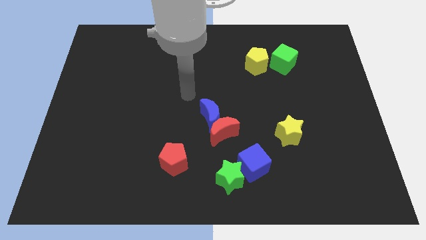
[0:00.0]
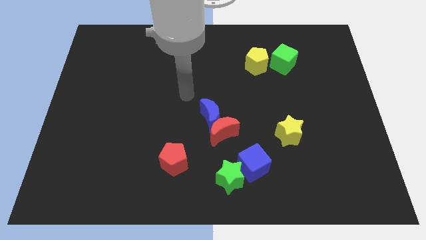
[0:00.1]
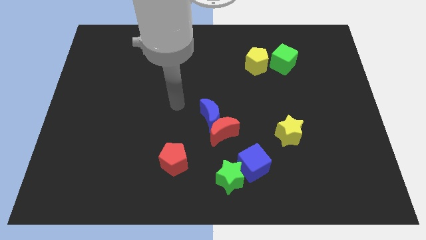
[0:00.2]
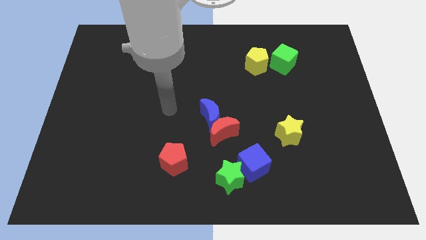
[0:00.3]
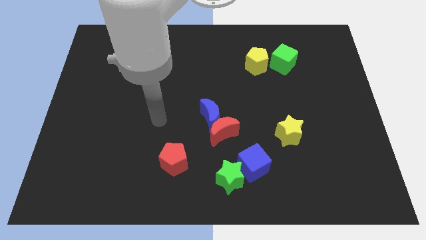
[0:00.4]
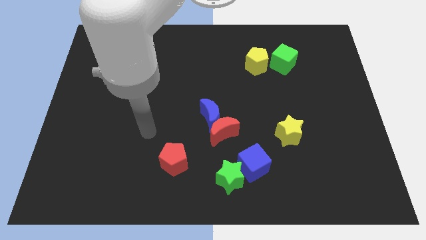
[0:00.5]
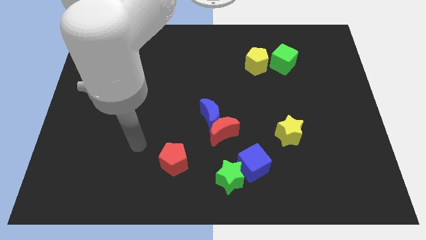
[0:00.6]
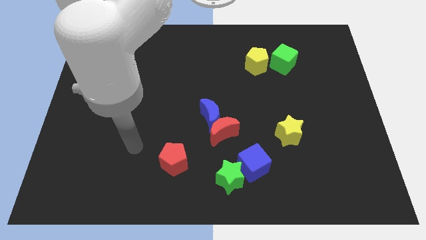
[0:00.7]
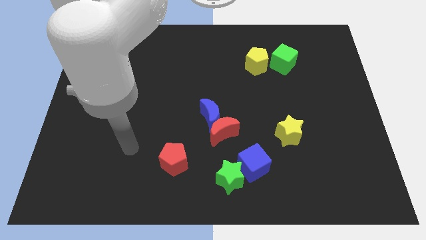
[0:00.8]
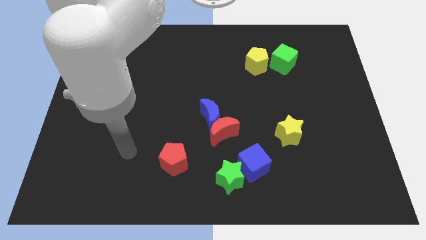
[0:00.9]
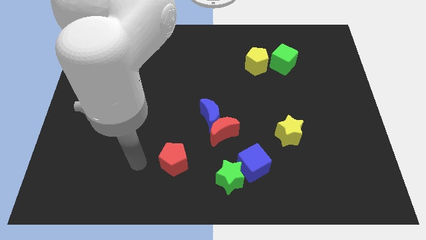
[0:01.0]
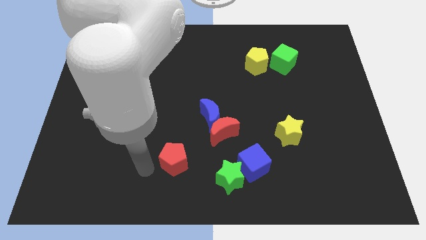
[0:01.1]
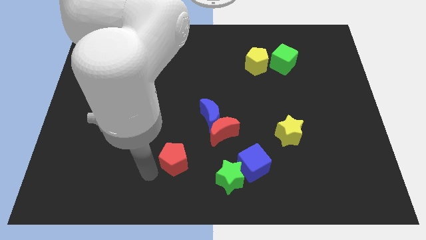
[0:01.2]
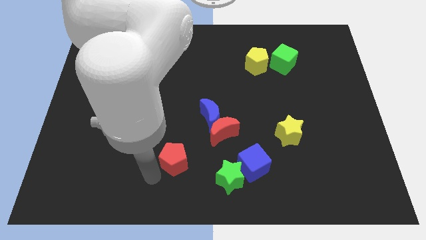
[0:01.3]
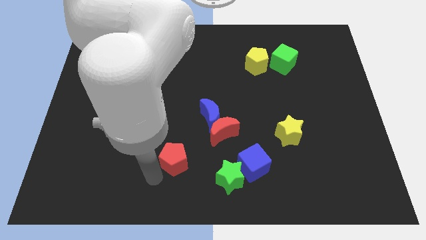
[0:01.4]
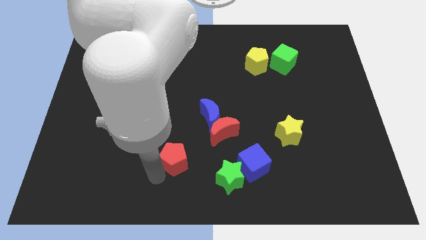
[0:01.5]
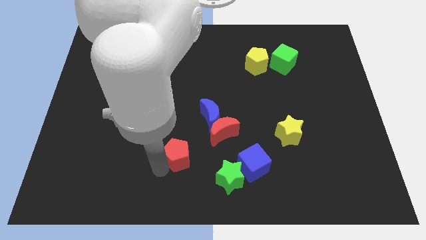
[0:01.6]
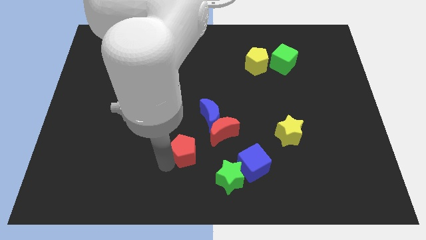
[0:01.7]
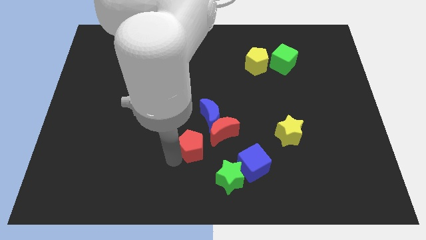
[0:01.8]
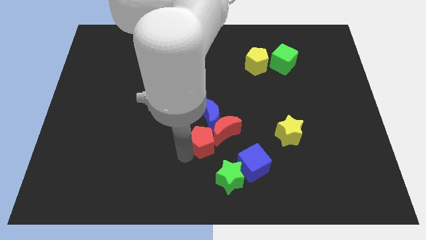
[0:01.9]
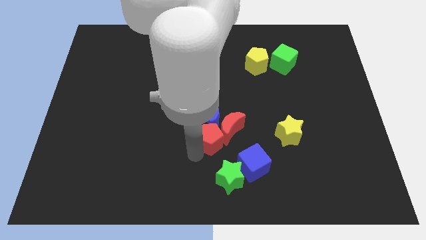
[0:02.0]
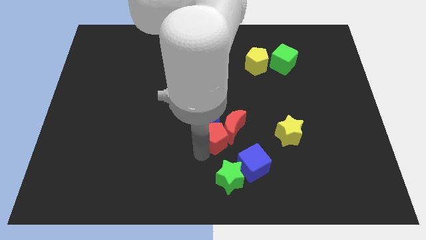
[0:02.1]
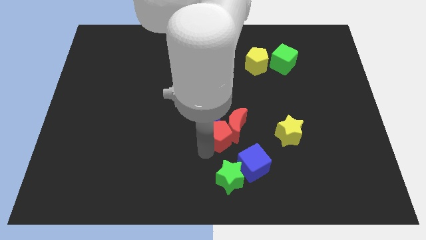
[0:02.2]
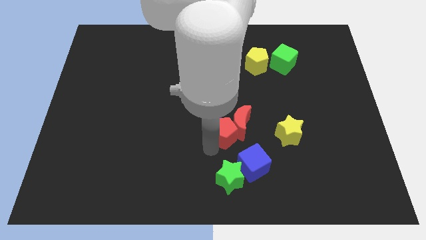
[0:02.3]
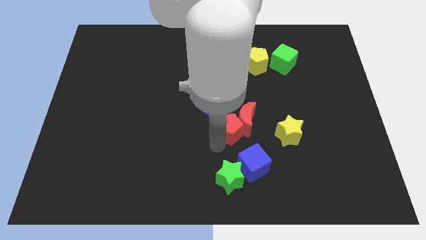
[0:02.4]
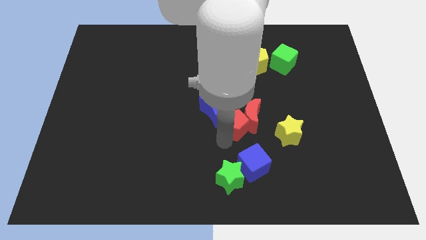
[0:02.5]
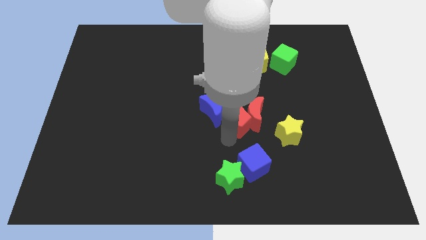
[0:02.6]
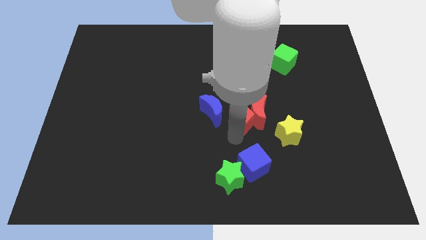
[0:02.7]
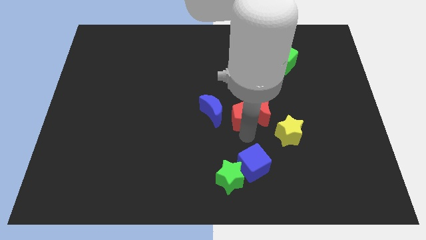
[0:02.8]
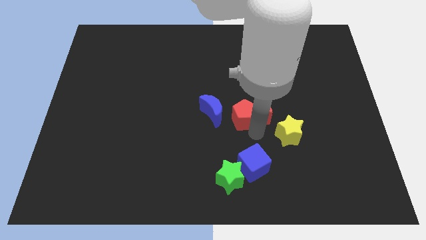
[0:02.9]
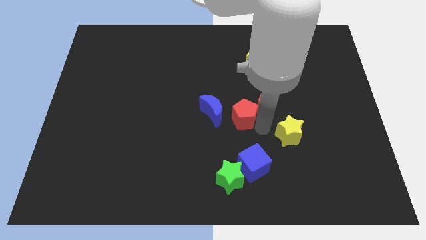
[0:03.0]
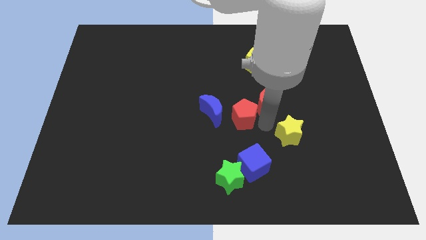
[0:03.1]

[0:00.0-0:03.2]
put the red pentagon on the right side of the blue crescent

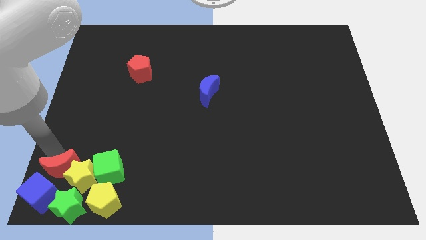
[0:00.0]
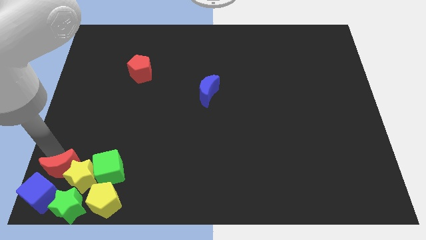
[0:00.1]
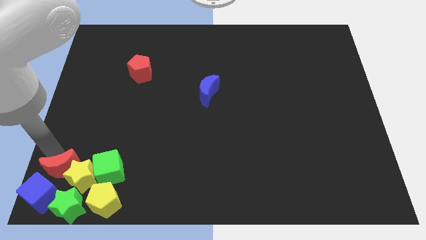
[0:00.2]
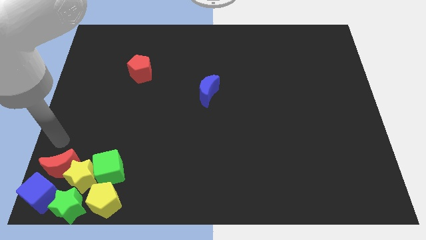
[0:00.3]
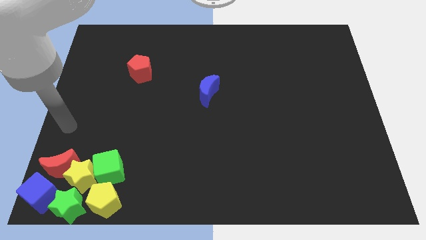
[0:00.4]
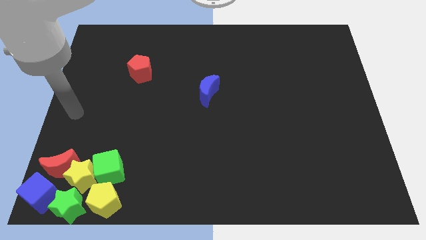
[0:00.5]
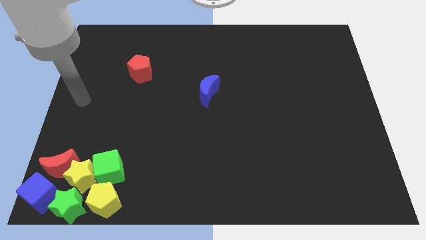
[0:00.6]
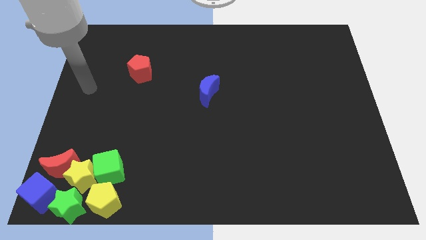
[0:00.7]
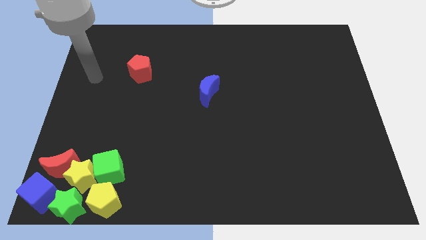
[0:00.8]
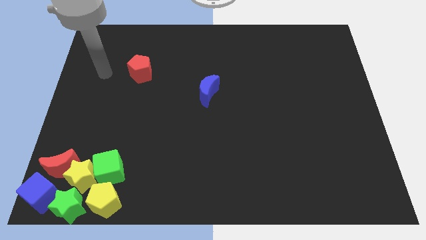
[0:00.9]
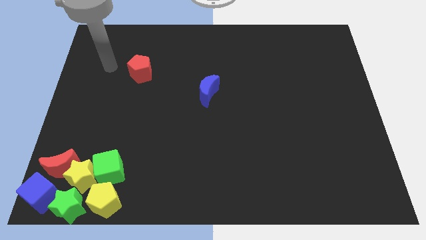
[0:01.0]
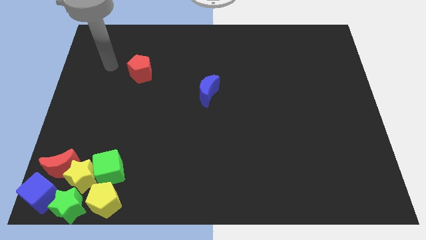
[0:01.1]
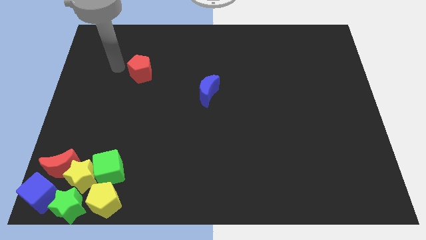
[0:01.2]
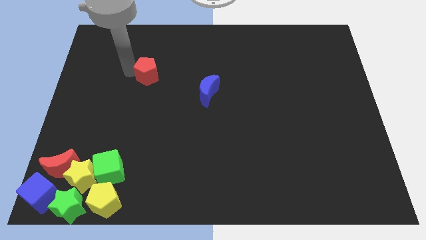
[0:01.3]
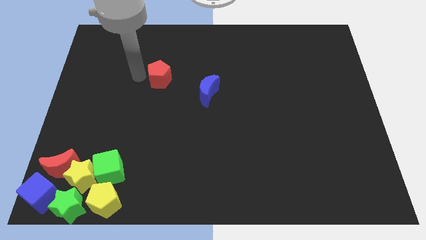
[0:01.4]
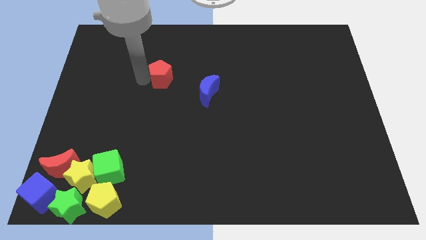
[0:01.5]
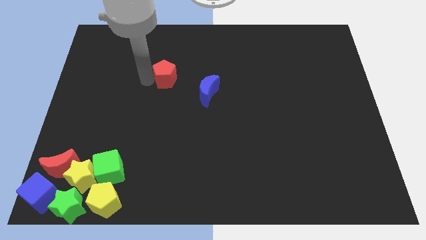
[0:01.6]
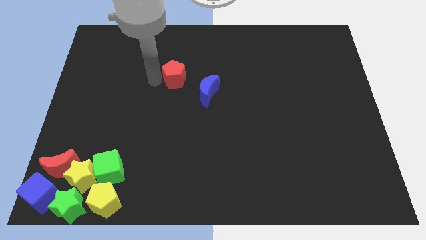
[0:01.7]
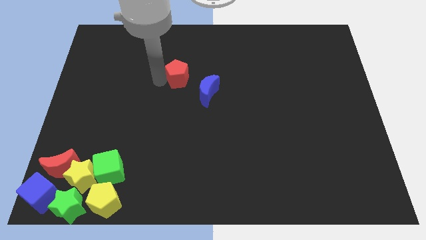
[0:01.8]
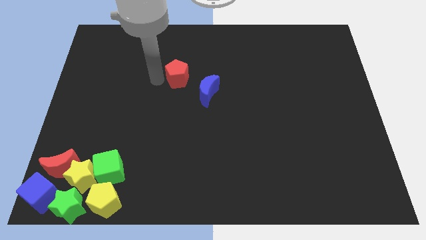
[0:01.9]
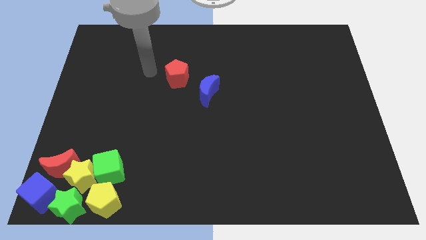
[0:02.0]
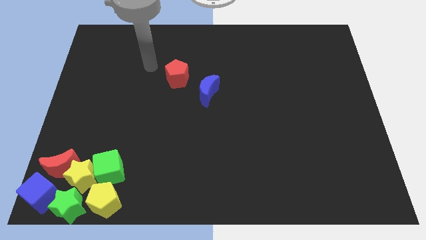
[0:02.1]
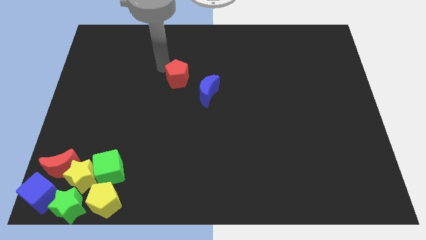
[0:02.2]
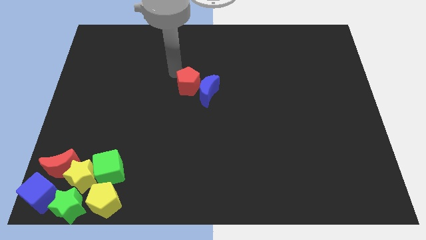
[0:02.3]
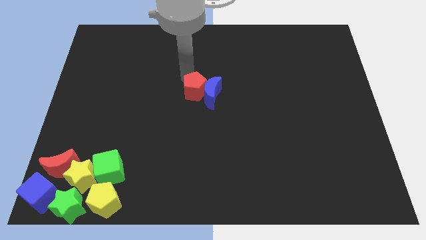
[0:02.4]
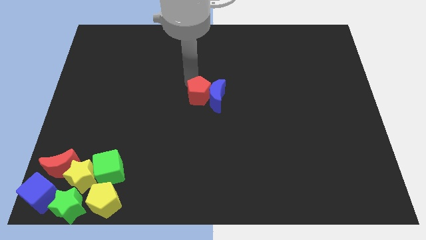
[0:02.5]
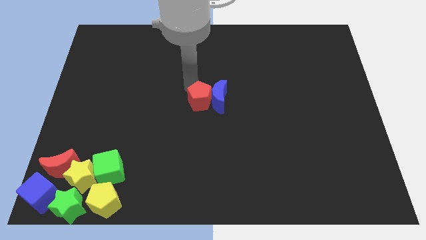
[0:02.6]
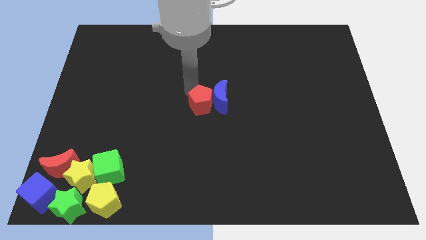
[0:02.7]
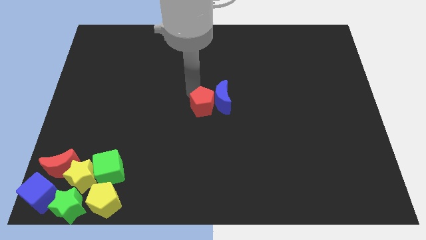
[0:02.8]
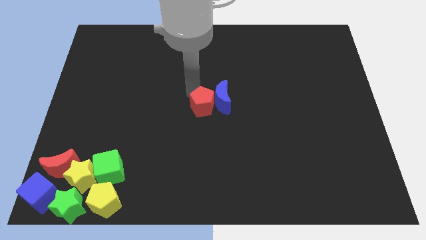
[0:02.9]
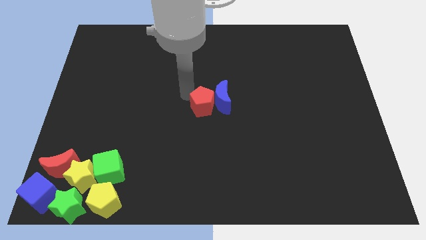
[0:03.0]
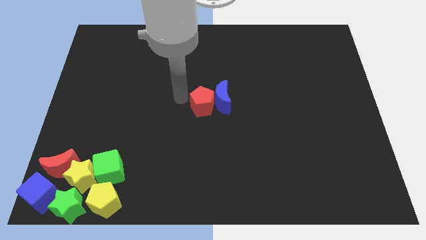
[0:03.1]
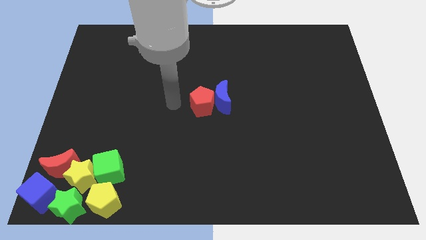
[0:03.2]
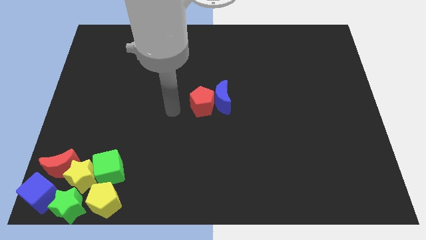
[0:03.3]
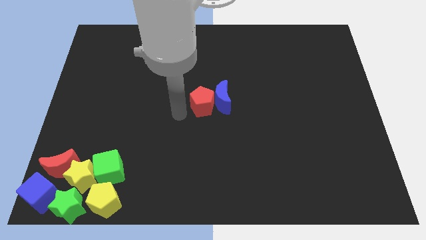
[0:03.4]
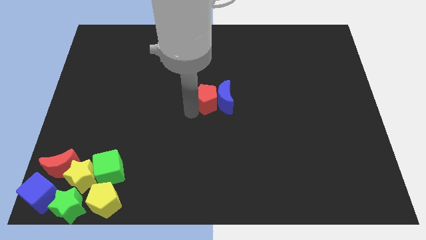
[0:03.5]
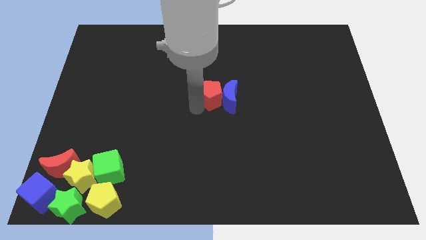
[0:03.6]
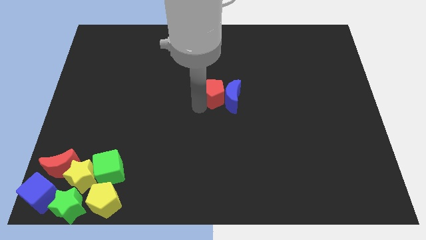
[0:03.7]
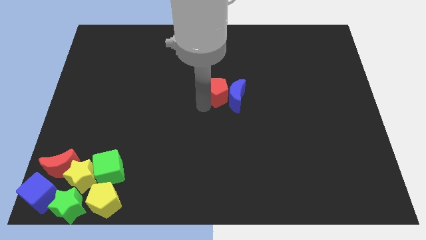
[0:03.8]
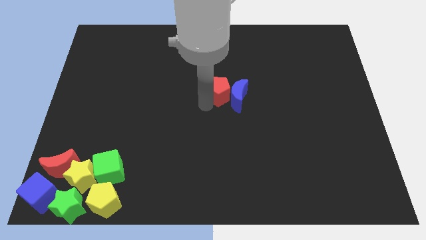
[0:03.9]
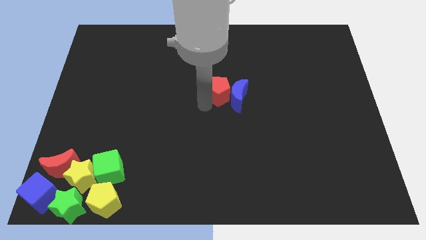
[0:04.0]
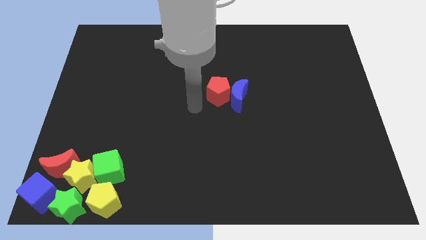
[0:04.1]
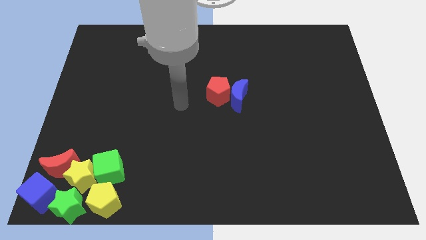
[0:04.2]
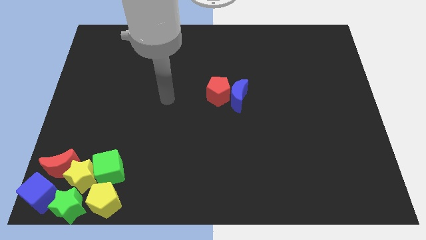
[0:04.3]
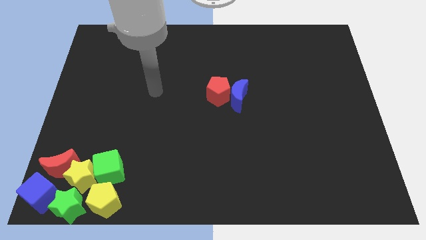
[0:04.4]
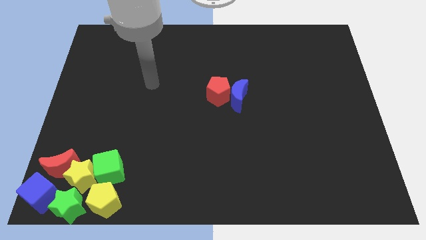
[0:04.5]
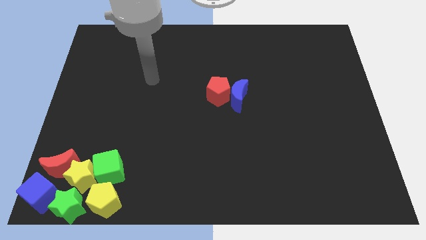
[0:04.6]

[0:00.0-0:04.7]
push the red pentagon into the blue moon

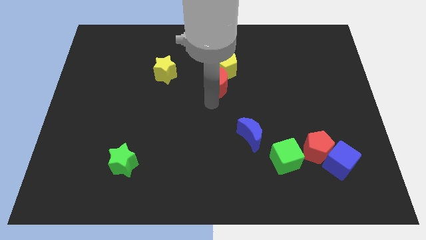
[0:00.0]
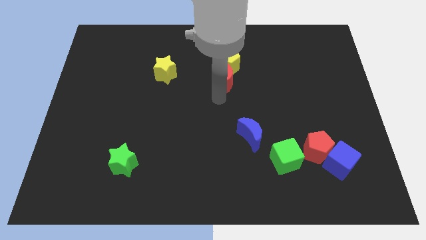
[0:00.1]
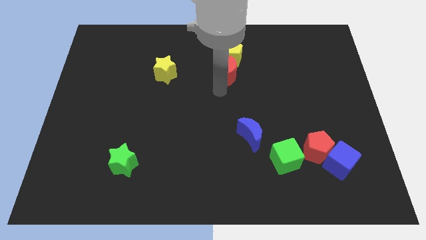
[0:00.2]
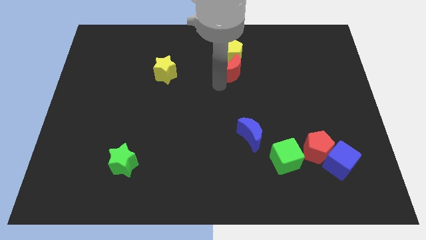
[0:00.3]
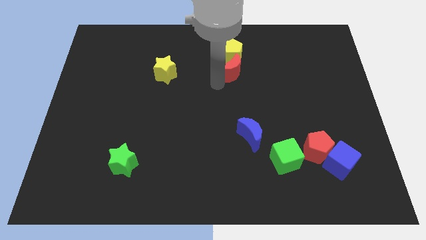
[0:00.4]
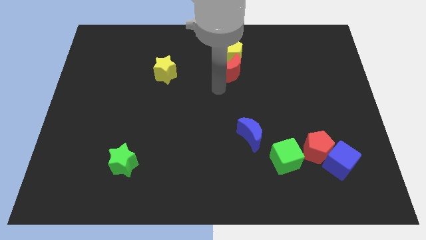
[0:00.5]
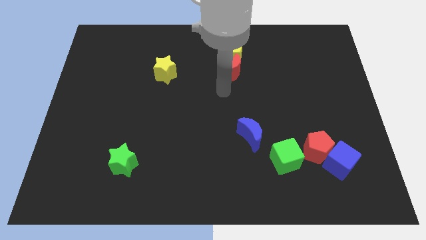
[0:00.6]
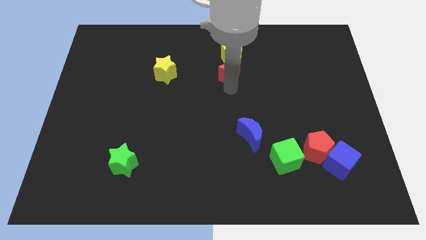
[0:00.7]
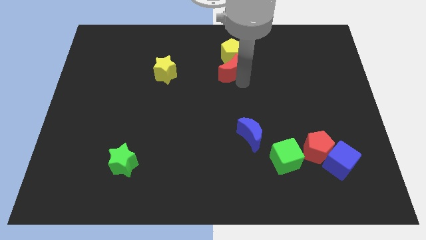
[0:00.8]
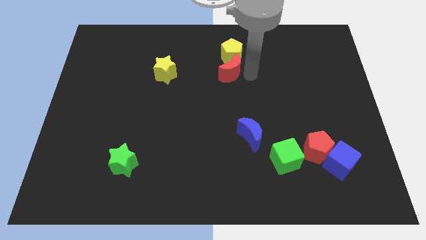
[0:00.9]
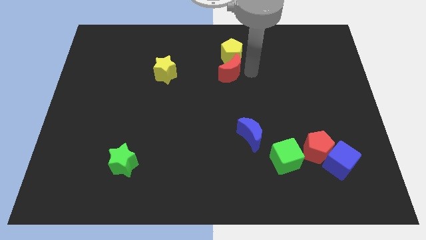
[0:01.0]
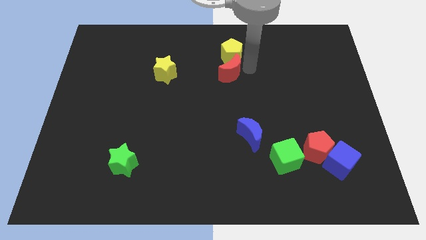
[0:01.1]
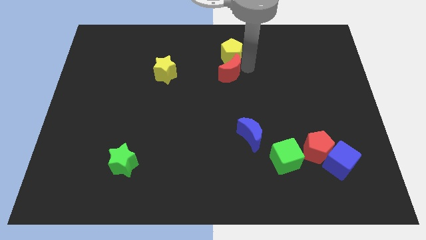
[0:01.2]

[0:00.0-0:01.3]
push the red moon into the yellow pentagon
